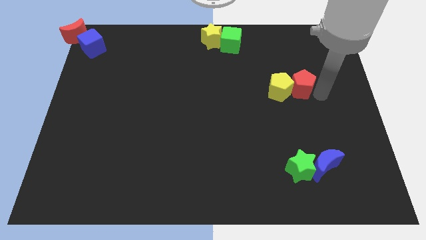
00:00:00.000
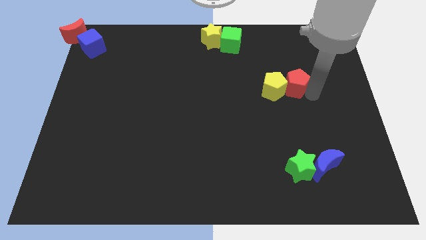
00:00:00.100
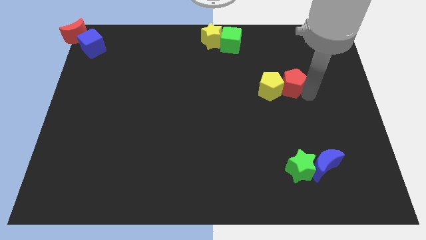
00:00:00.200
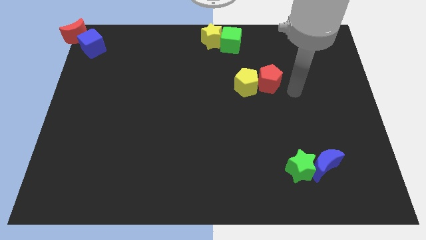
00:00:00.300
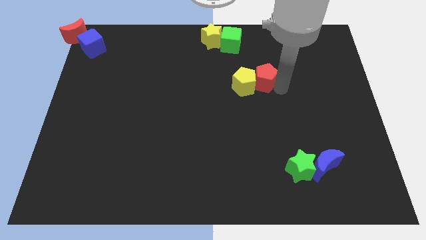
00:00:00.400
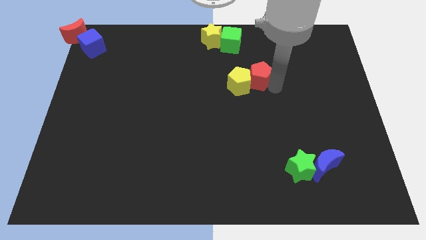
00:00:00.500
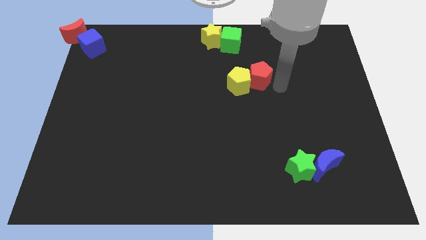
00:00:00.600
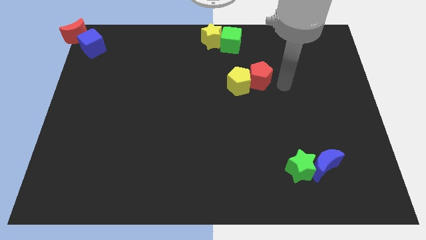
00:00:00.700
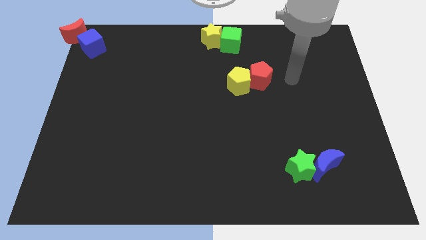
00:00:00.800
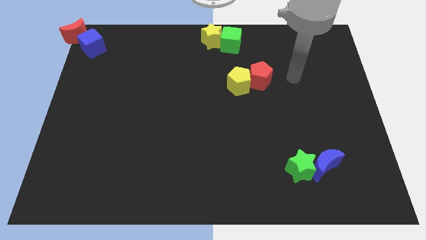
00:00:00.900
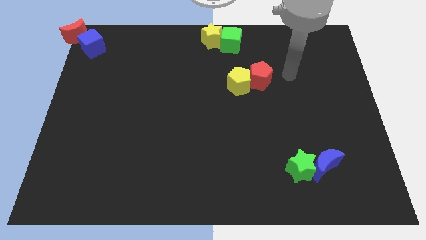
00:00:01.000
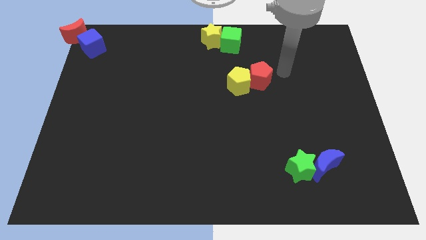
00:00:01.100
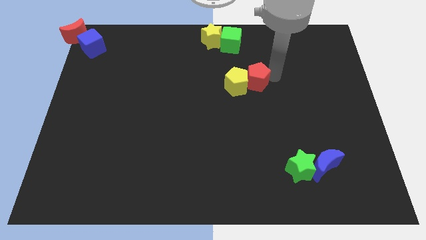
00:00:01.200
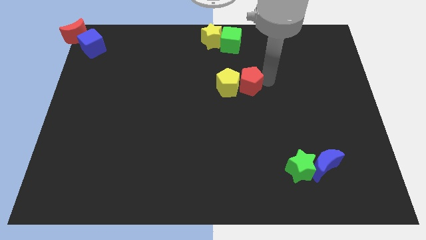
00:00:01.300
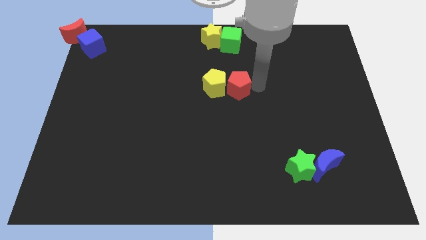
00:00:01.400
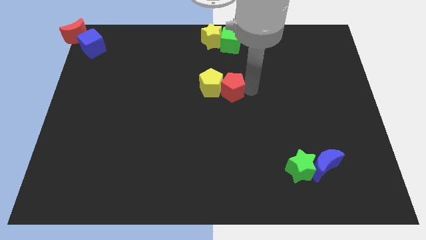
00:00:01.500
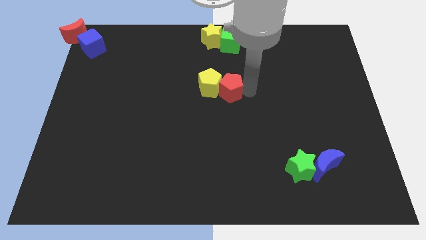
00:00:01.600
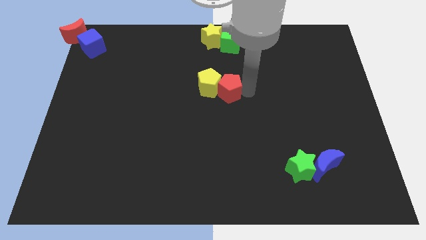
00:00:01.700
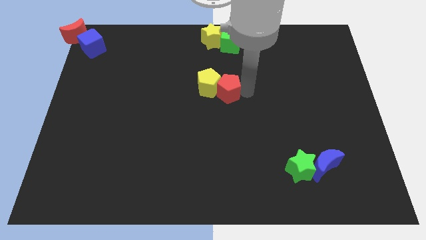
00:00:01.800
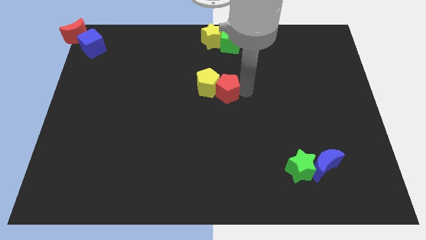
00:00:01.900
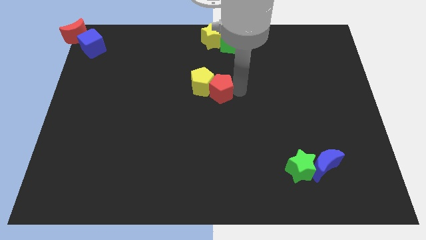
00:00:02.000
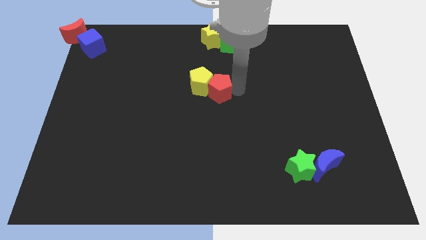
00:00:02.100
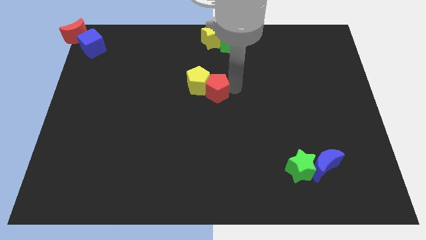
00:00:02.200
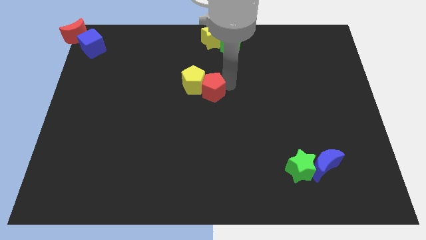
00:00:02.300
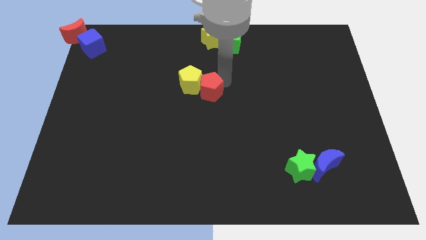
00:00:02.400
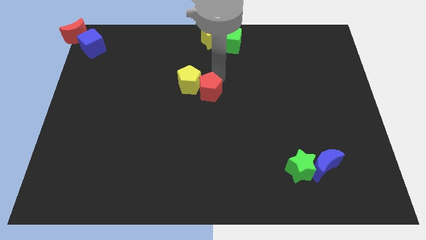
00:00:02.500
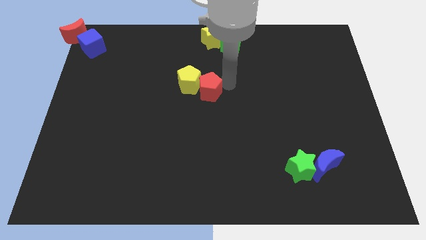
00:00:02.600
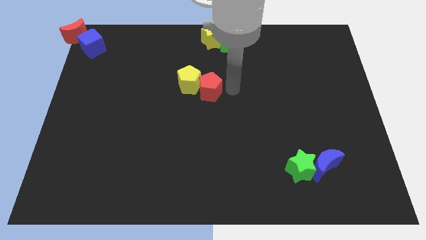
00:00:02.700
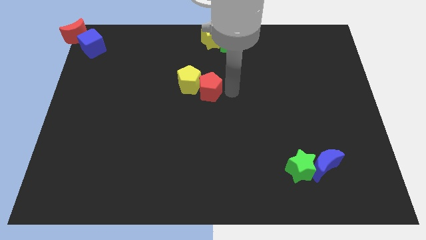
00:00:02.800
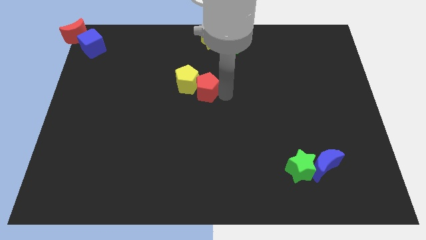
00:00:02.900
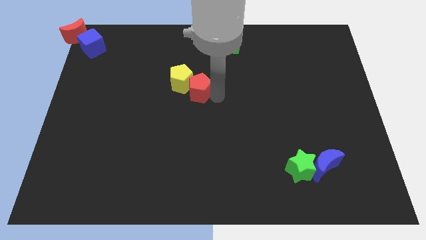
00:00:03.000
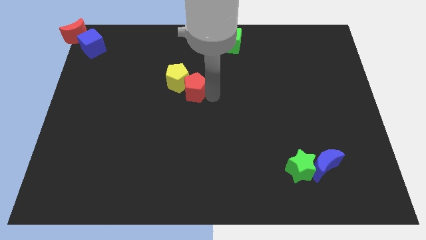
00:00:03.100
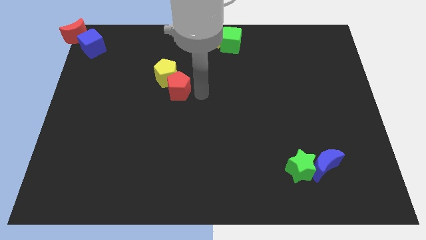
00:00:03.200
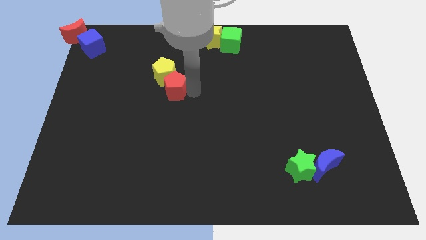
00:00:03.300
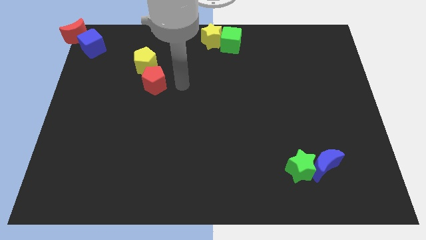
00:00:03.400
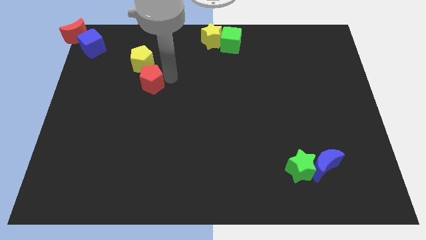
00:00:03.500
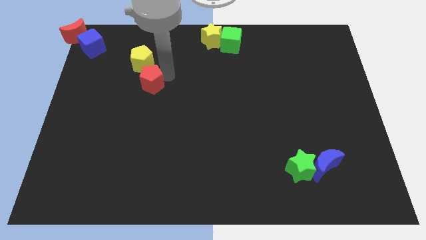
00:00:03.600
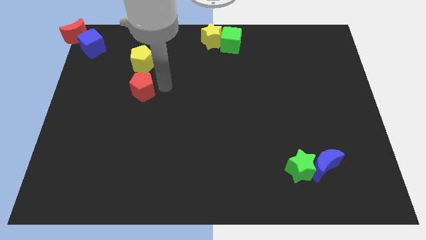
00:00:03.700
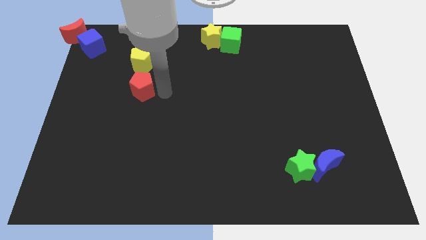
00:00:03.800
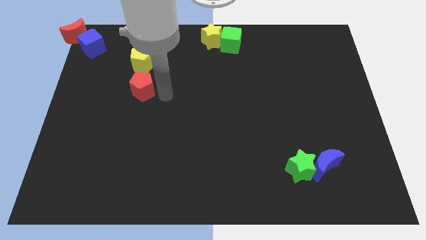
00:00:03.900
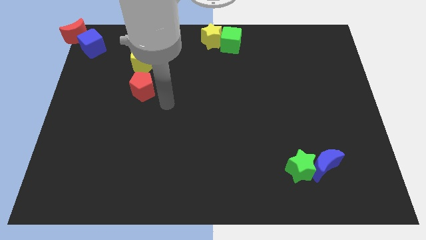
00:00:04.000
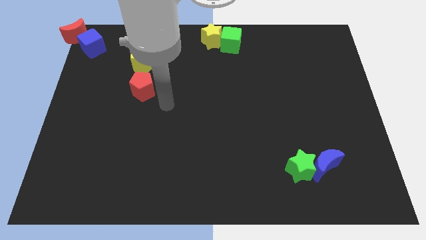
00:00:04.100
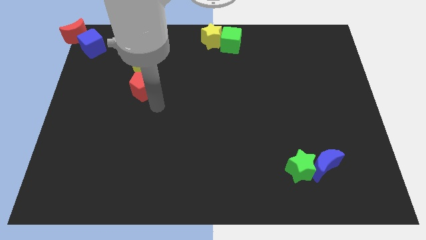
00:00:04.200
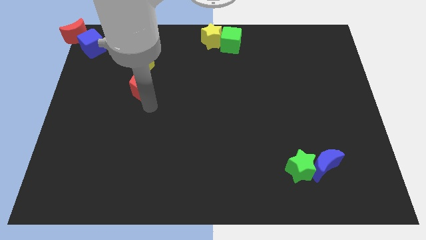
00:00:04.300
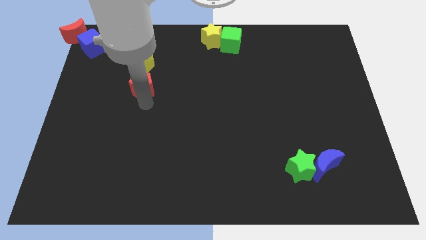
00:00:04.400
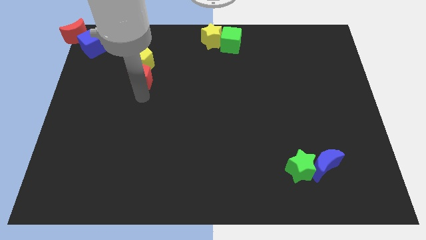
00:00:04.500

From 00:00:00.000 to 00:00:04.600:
move the pentagons to the top left of the board

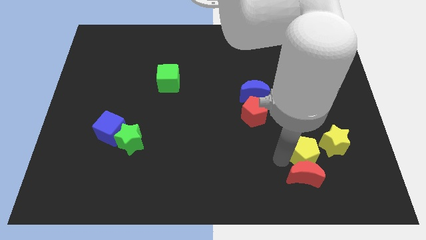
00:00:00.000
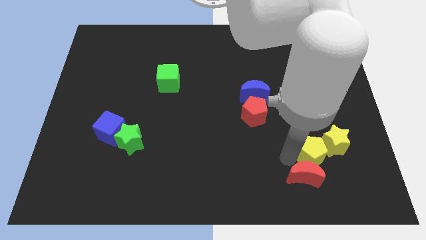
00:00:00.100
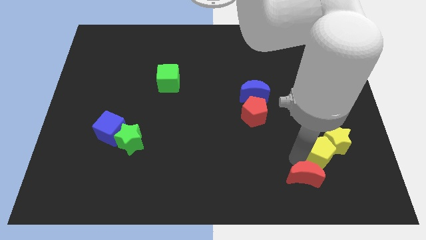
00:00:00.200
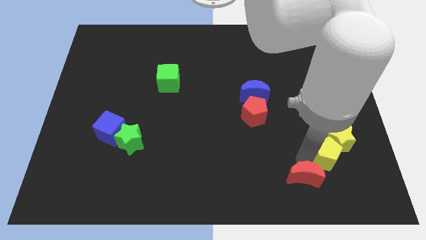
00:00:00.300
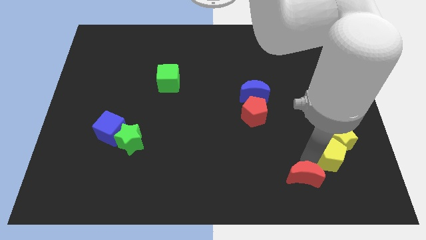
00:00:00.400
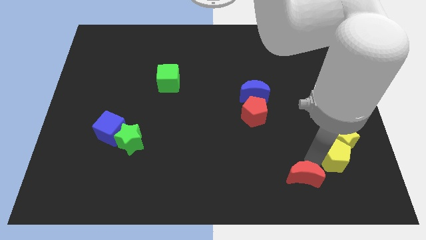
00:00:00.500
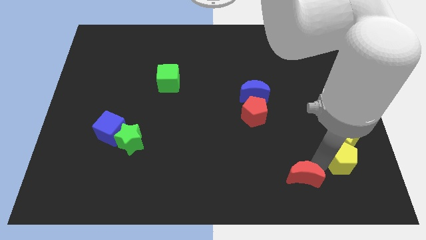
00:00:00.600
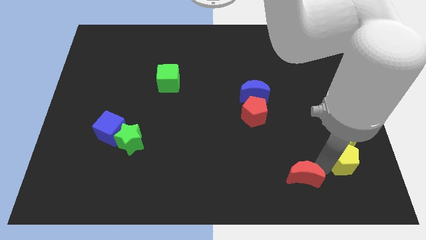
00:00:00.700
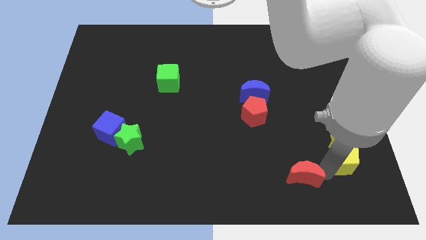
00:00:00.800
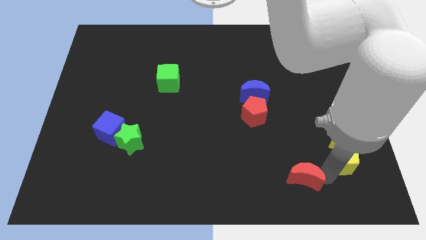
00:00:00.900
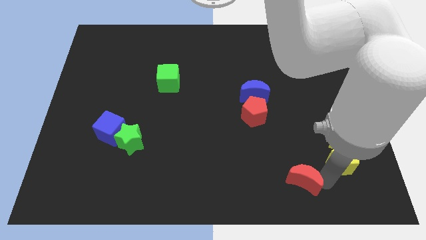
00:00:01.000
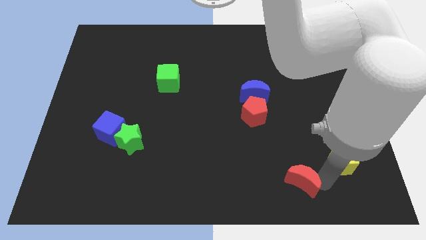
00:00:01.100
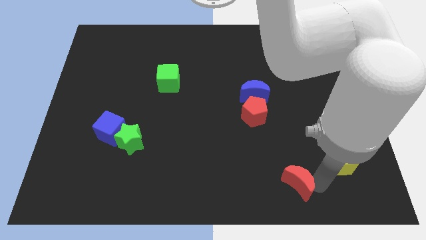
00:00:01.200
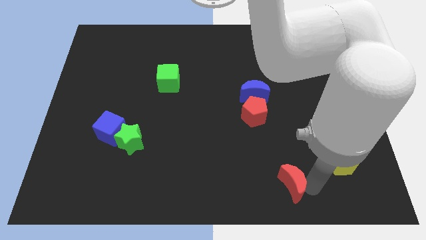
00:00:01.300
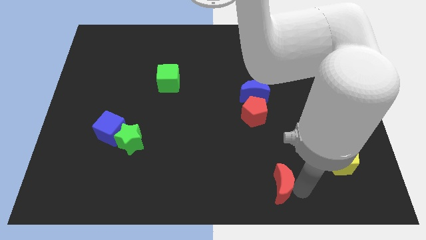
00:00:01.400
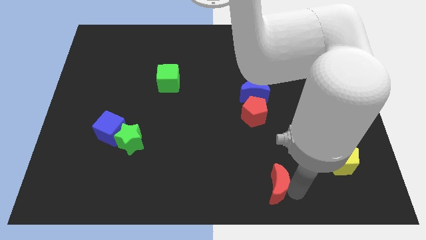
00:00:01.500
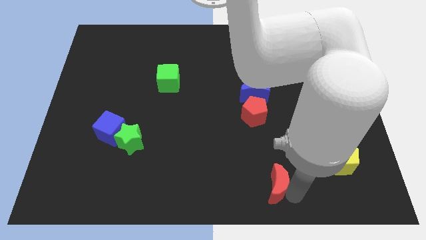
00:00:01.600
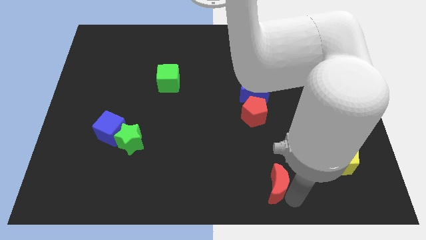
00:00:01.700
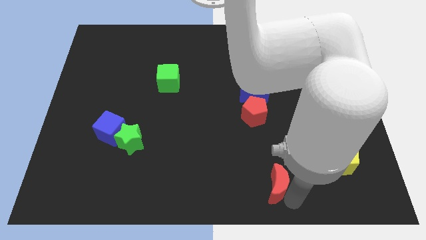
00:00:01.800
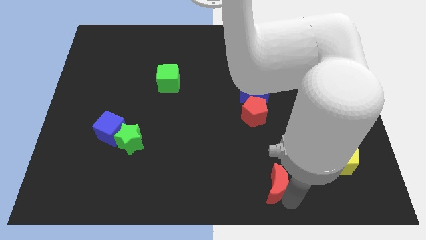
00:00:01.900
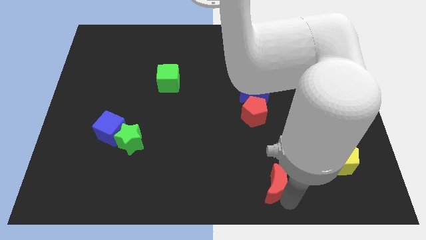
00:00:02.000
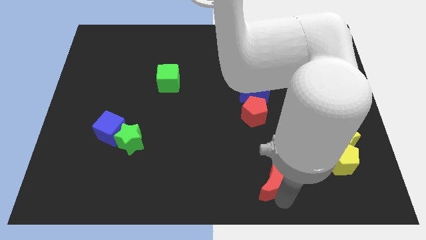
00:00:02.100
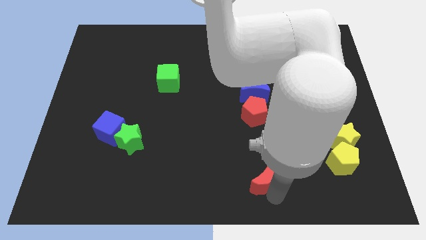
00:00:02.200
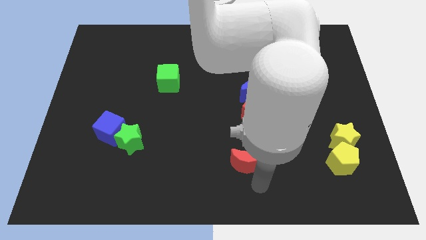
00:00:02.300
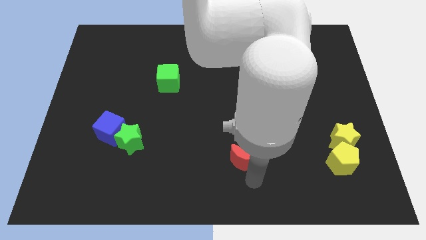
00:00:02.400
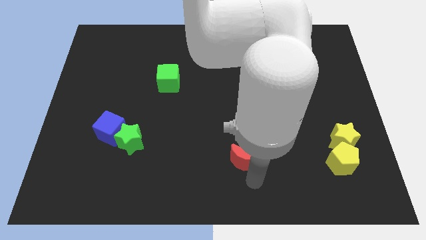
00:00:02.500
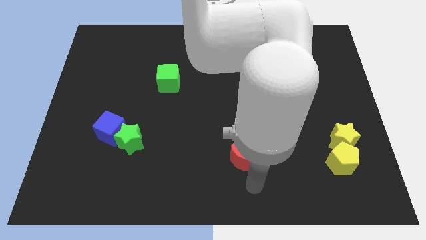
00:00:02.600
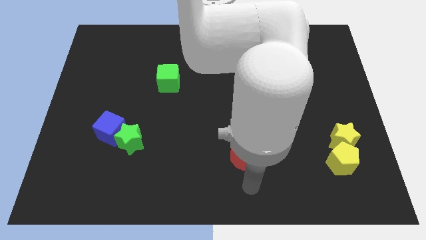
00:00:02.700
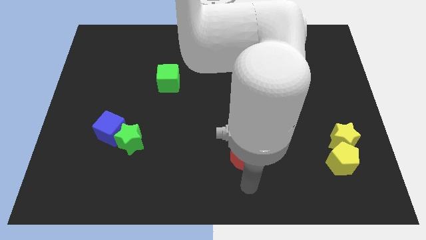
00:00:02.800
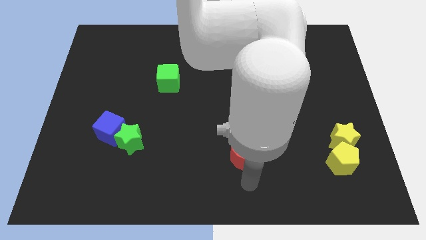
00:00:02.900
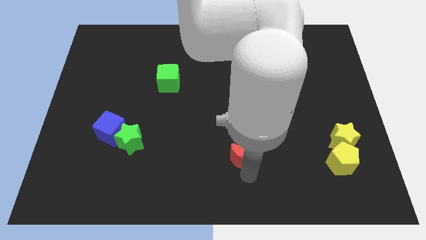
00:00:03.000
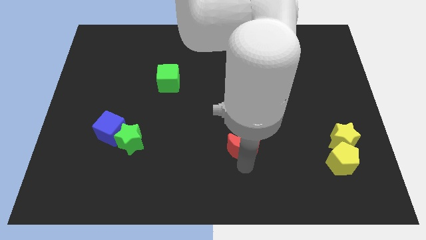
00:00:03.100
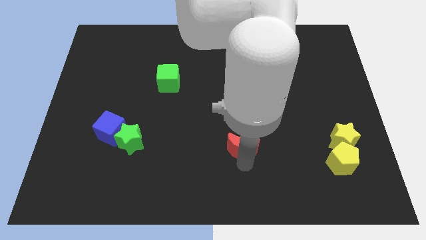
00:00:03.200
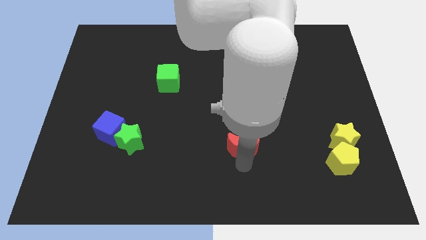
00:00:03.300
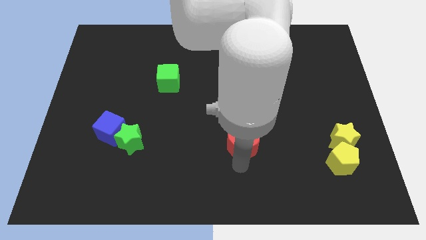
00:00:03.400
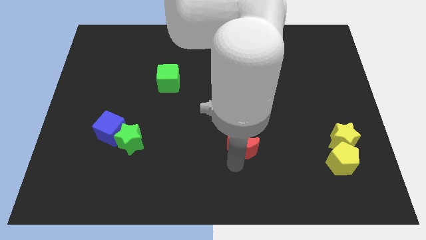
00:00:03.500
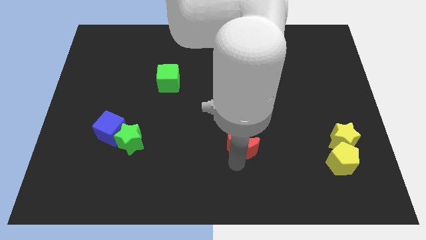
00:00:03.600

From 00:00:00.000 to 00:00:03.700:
move the red moon slightly up

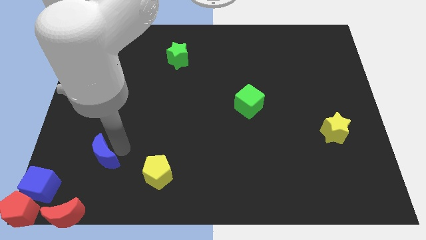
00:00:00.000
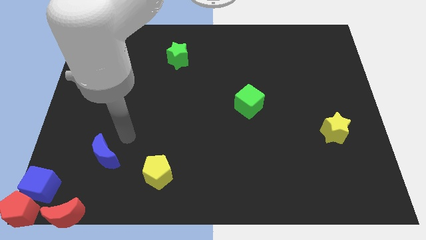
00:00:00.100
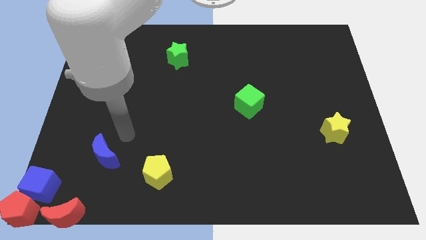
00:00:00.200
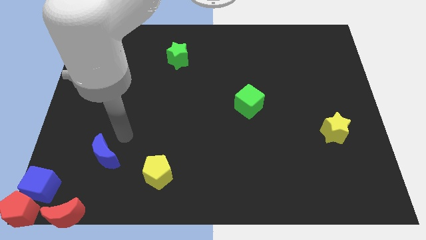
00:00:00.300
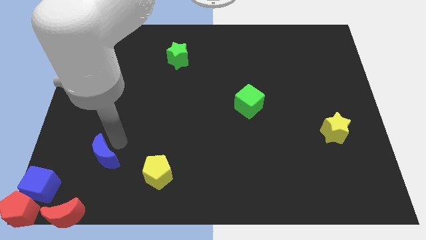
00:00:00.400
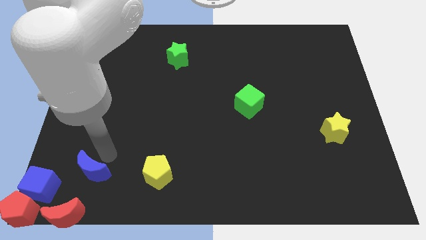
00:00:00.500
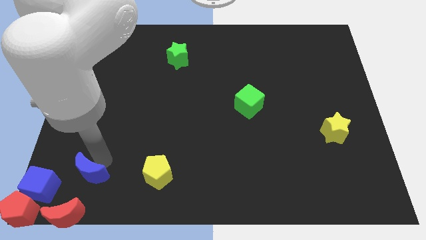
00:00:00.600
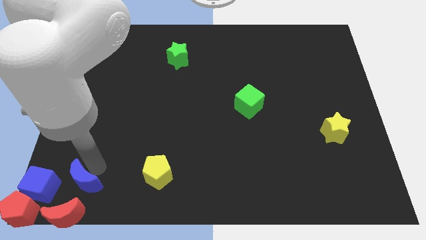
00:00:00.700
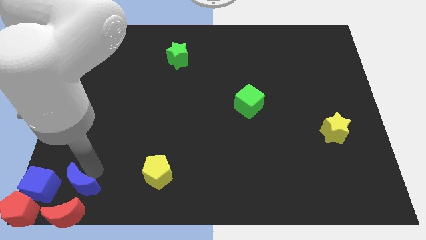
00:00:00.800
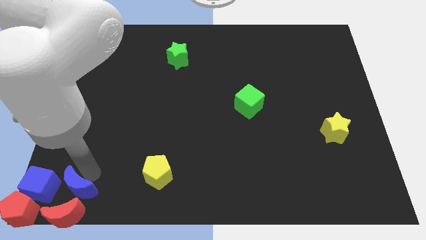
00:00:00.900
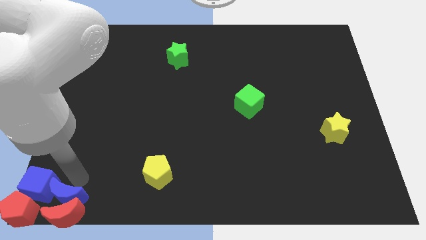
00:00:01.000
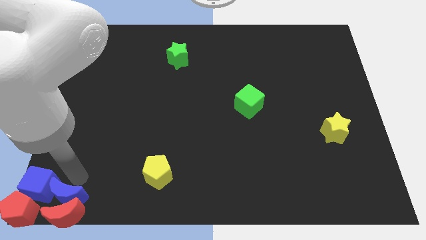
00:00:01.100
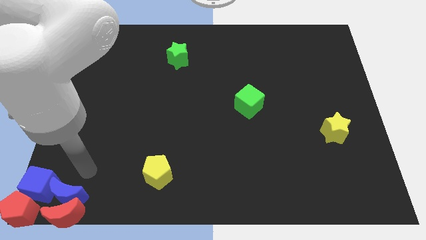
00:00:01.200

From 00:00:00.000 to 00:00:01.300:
push blue crescent into red crescent
